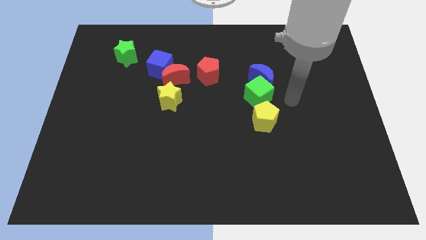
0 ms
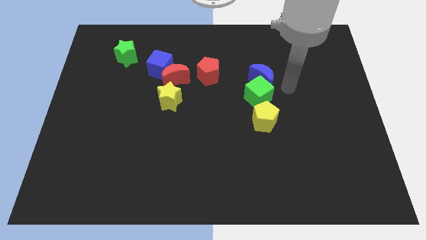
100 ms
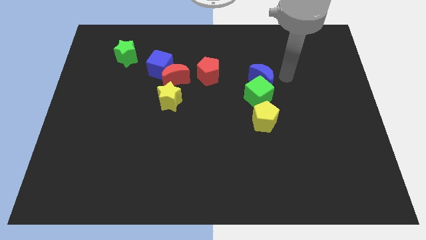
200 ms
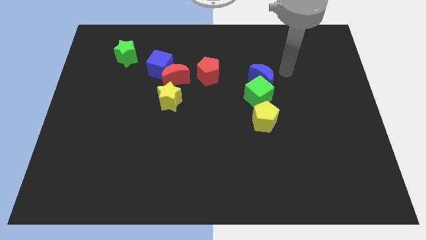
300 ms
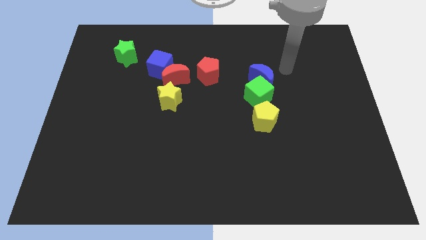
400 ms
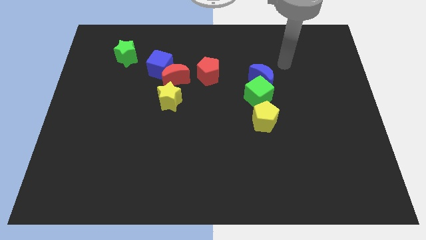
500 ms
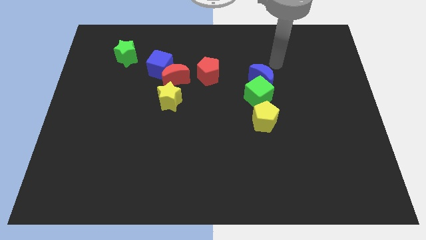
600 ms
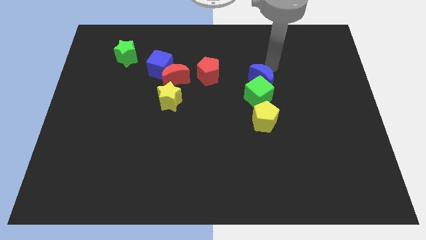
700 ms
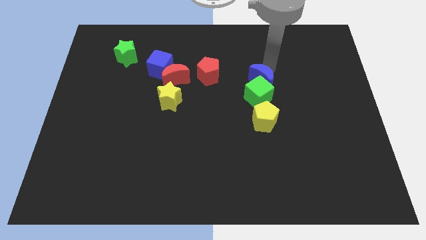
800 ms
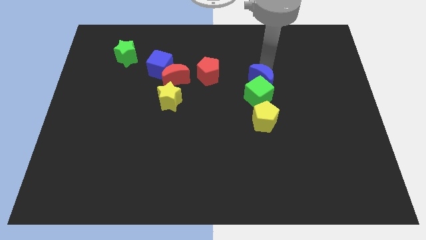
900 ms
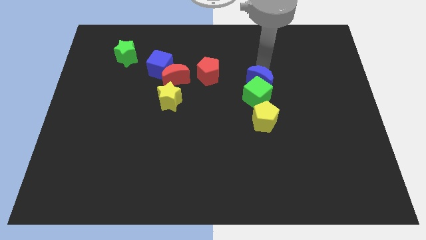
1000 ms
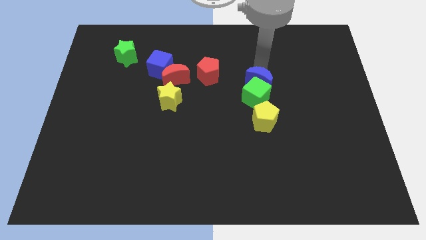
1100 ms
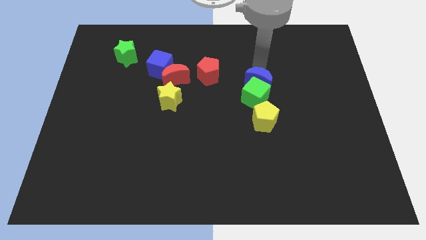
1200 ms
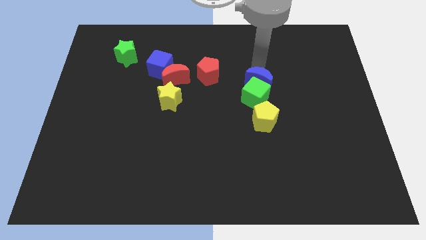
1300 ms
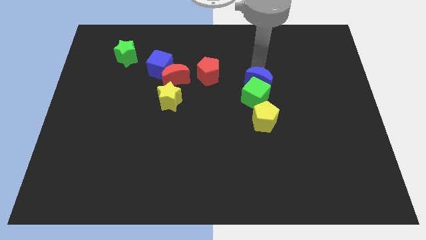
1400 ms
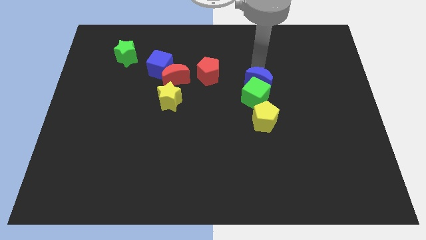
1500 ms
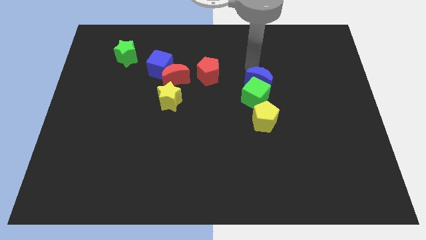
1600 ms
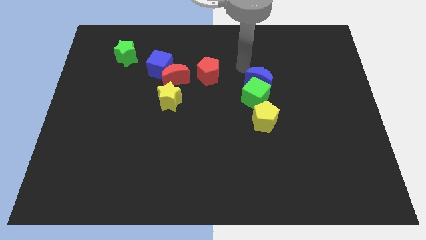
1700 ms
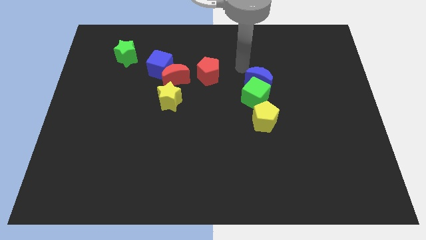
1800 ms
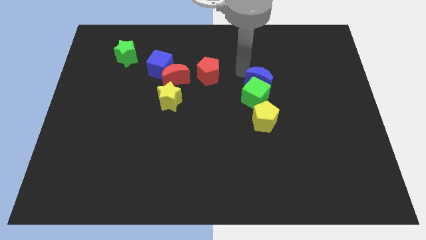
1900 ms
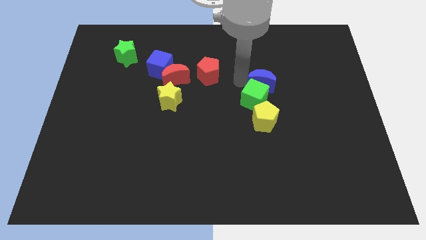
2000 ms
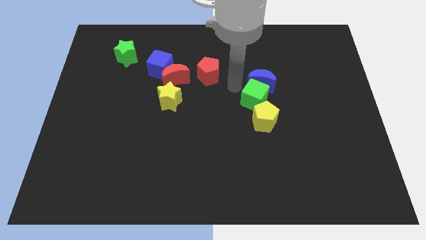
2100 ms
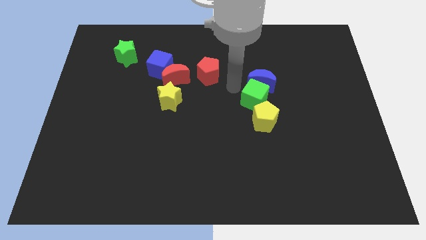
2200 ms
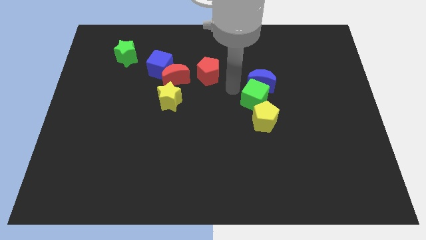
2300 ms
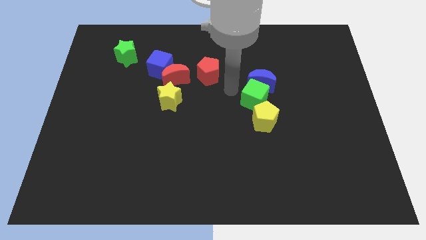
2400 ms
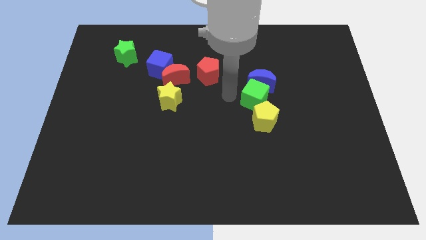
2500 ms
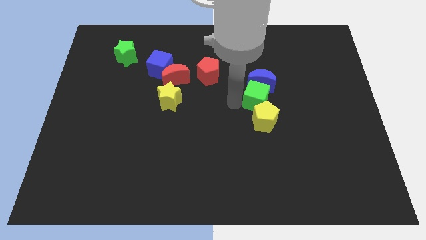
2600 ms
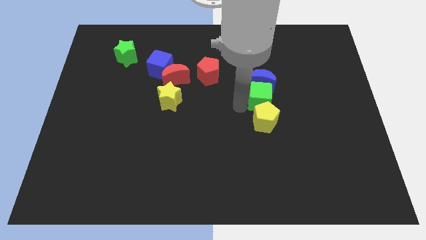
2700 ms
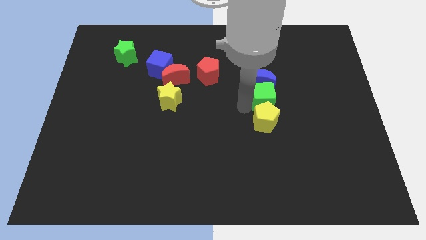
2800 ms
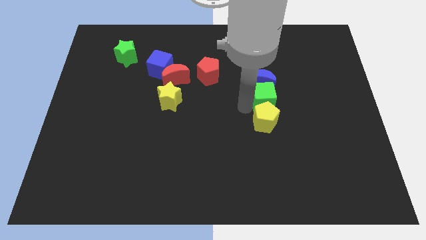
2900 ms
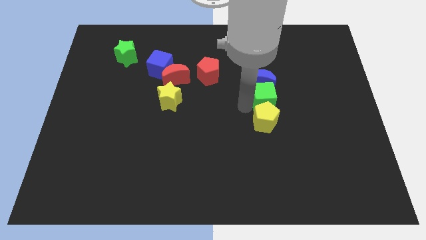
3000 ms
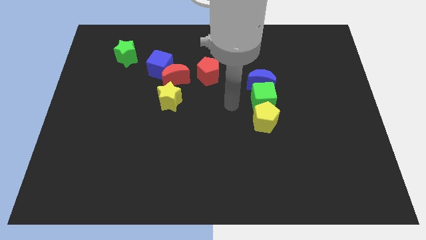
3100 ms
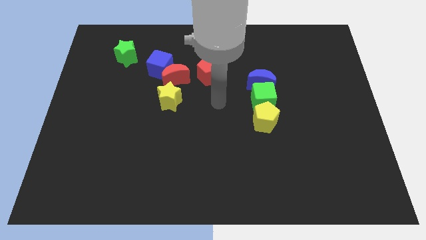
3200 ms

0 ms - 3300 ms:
make a vertical line with the blue crescent green cube and yellow pentagon

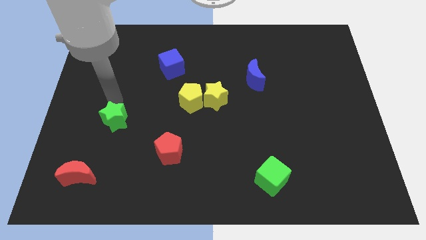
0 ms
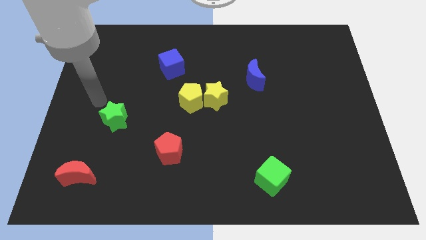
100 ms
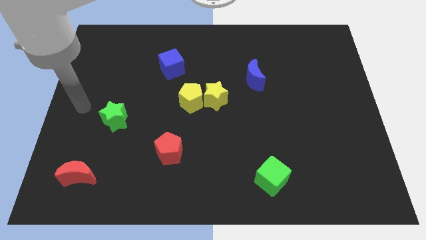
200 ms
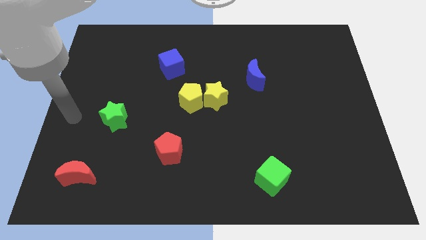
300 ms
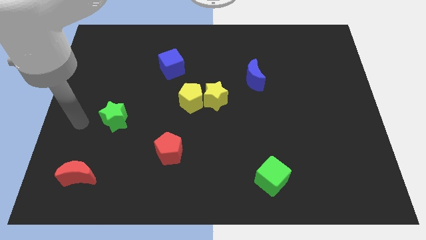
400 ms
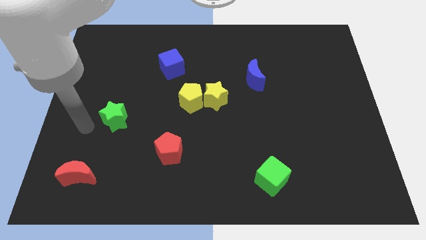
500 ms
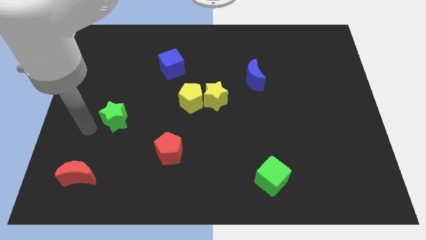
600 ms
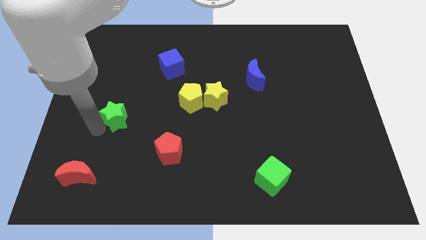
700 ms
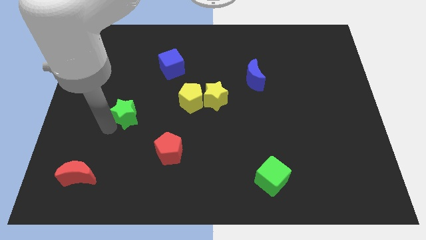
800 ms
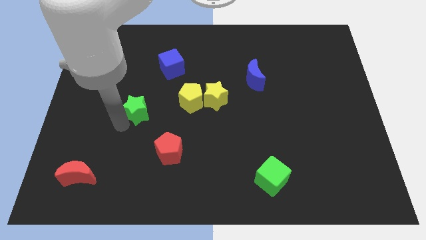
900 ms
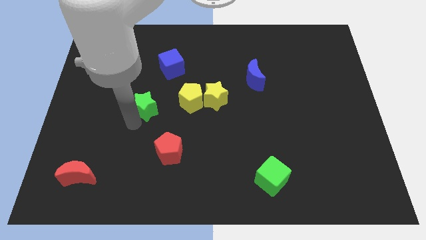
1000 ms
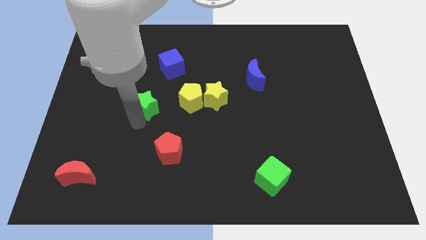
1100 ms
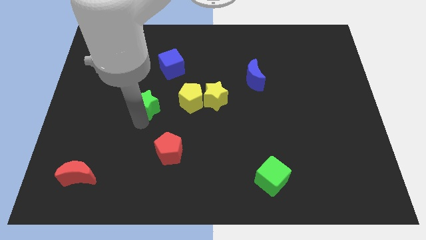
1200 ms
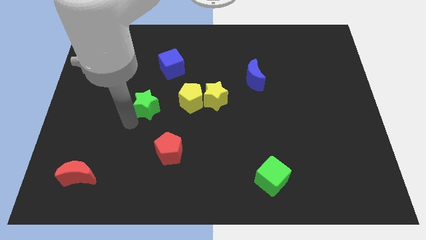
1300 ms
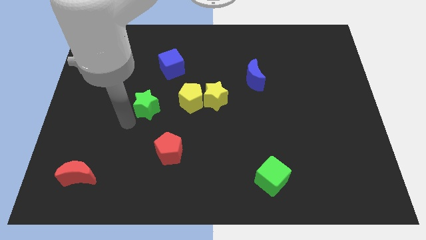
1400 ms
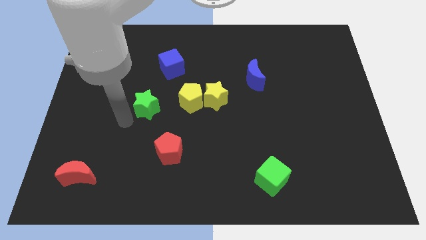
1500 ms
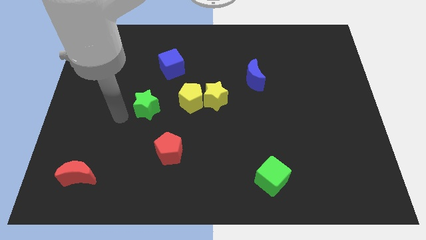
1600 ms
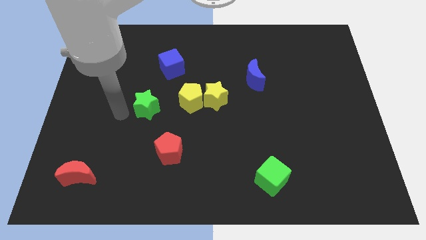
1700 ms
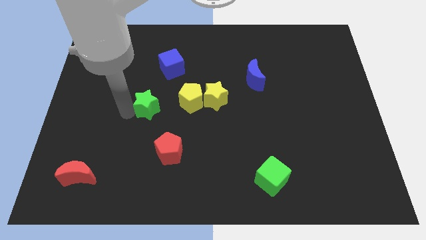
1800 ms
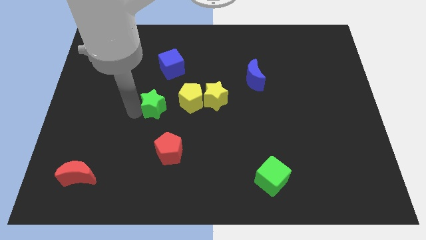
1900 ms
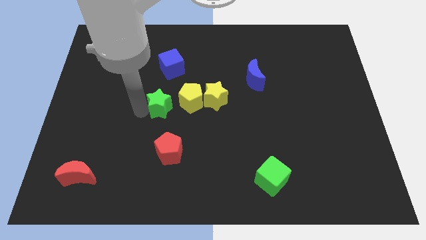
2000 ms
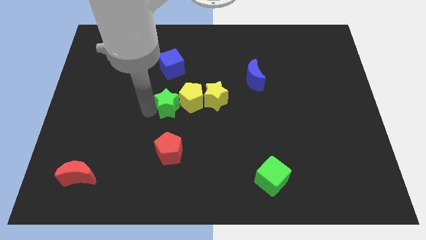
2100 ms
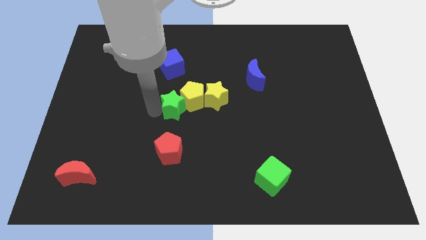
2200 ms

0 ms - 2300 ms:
place green star left to the yellow pentagon

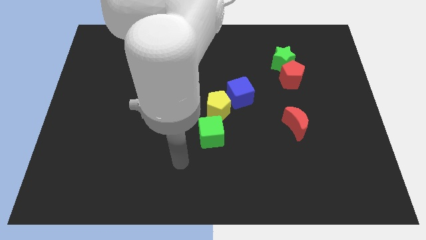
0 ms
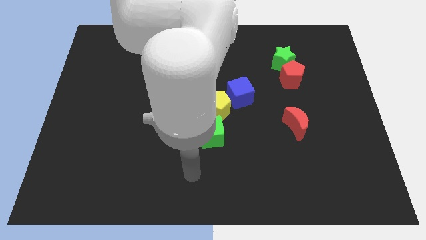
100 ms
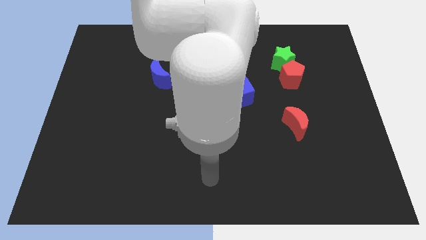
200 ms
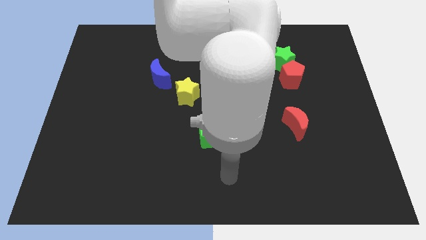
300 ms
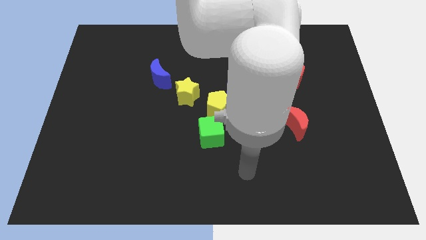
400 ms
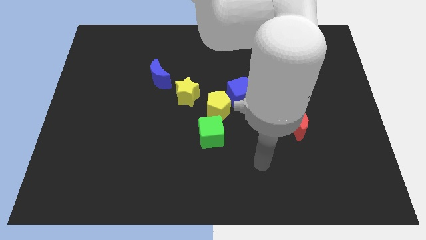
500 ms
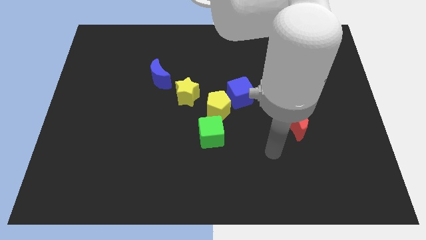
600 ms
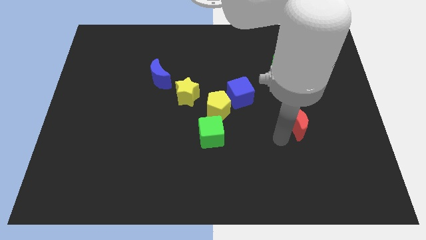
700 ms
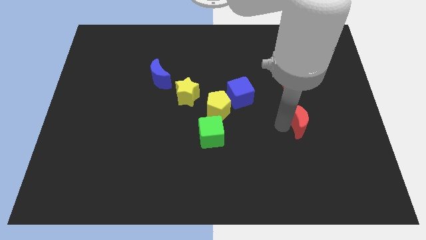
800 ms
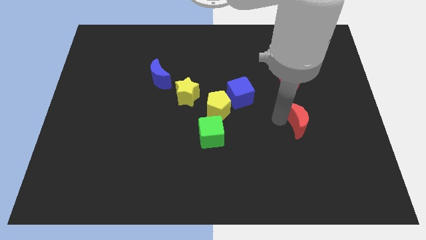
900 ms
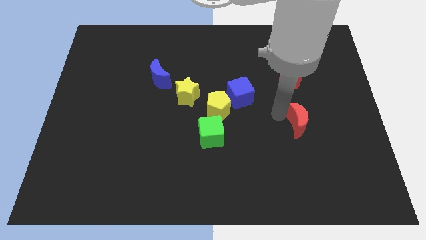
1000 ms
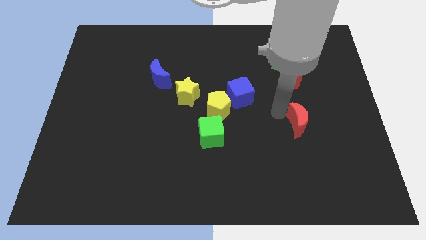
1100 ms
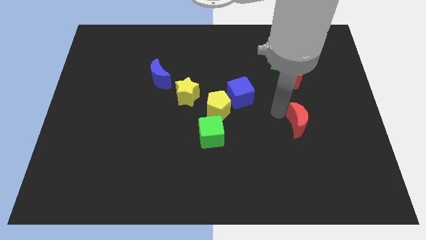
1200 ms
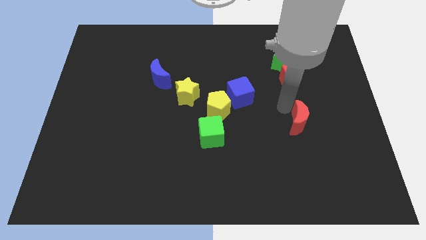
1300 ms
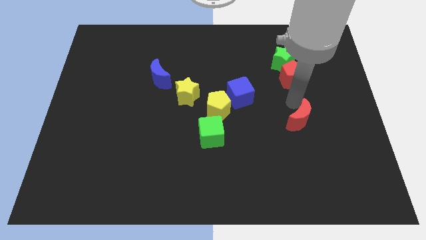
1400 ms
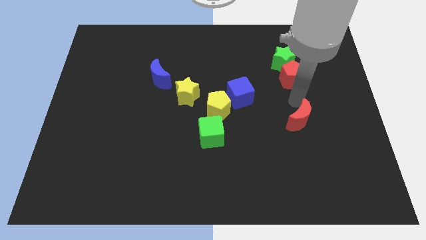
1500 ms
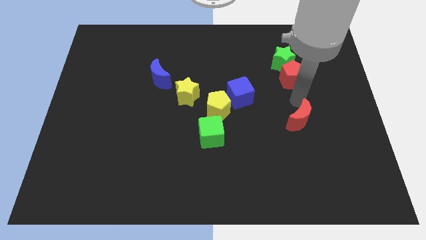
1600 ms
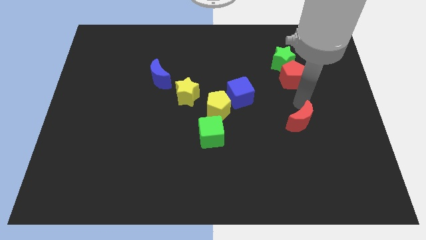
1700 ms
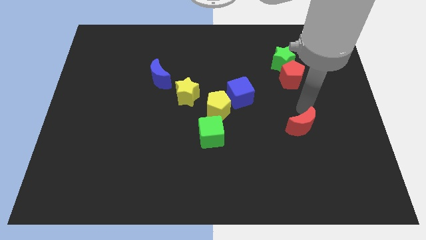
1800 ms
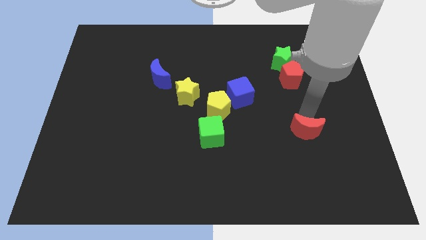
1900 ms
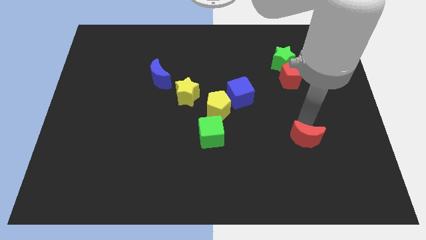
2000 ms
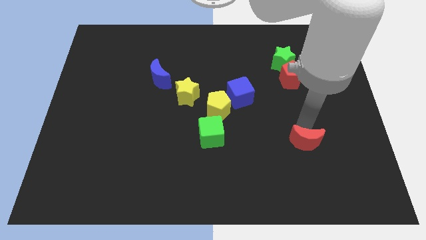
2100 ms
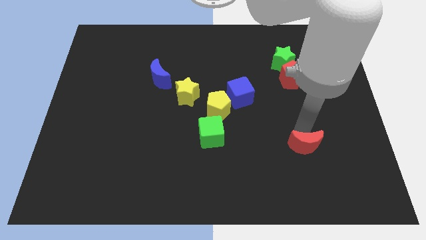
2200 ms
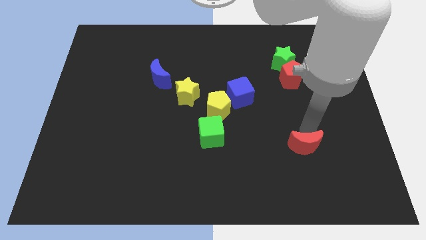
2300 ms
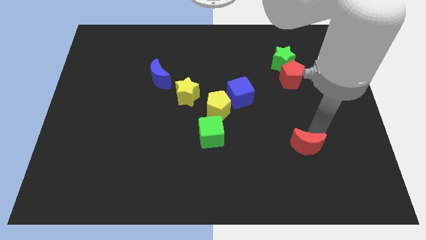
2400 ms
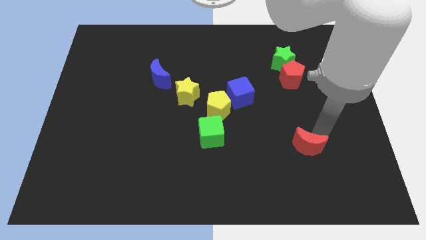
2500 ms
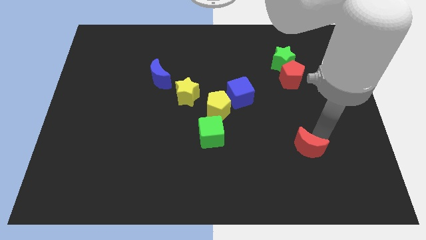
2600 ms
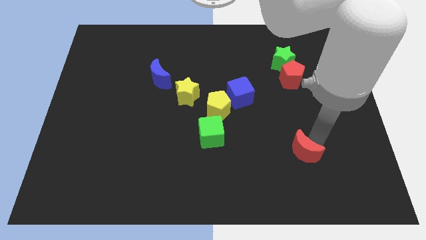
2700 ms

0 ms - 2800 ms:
move the red moon vertically to red pentagon

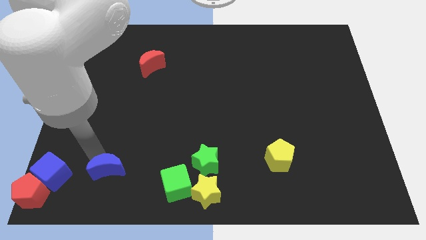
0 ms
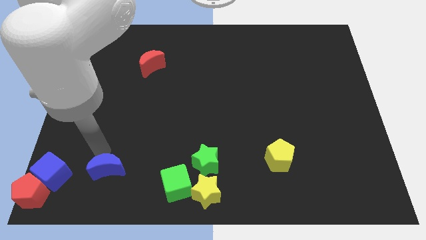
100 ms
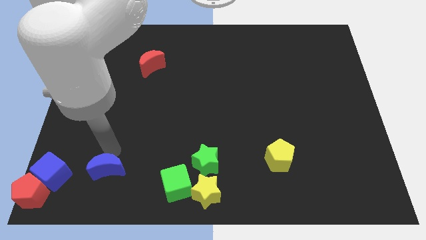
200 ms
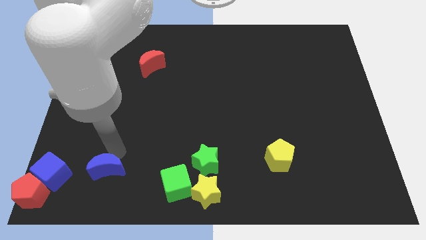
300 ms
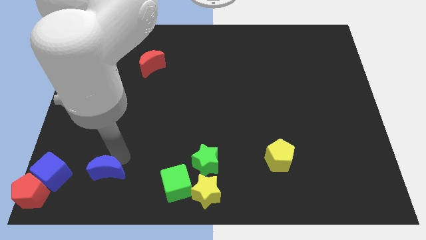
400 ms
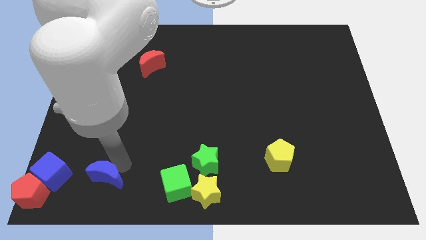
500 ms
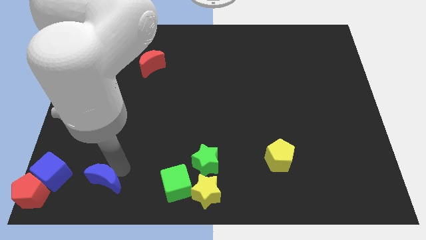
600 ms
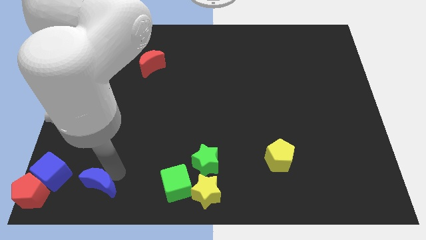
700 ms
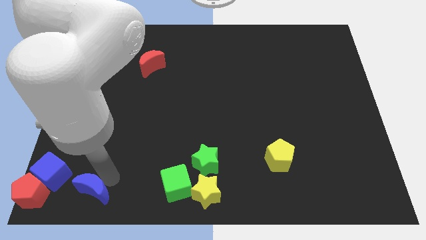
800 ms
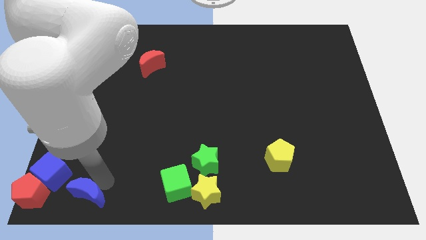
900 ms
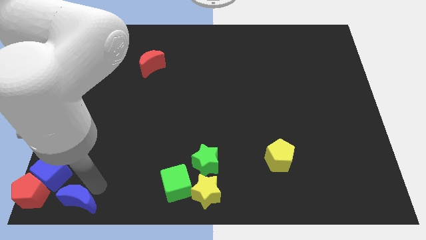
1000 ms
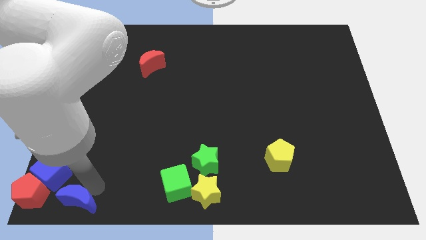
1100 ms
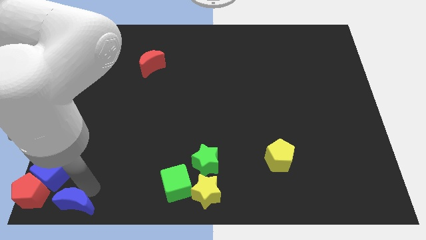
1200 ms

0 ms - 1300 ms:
move blue crescent to bottom left
